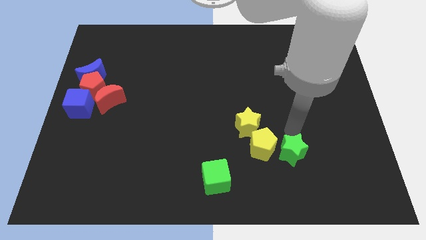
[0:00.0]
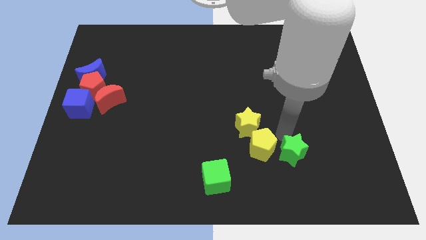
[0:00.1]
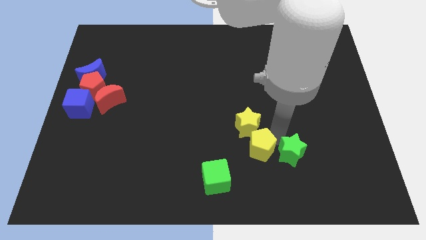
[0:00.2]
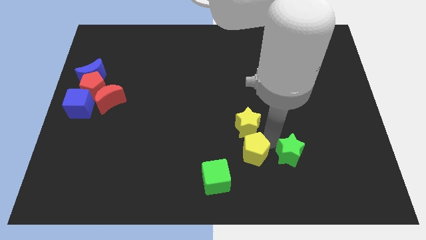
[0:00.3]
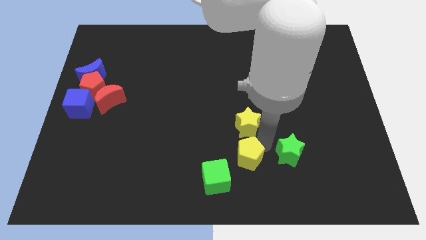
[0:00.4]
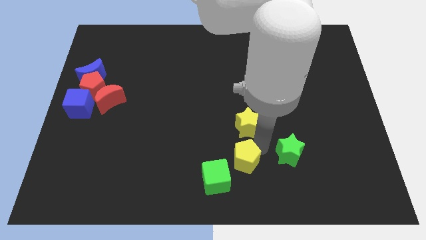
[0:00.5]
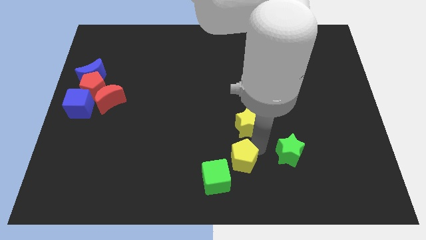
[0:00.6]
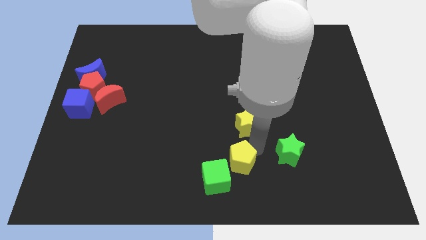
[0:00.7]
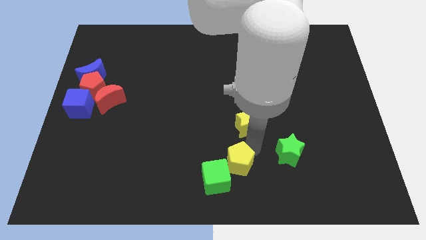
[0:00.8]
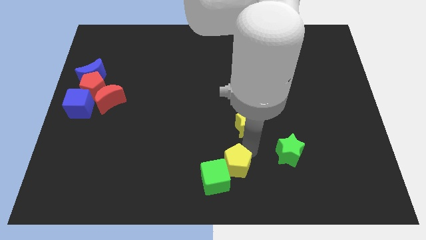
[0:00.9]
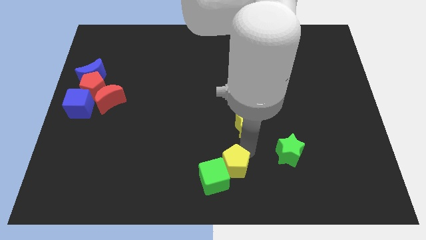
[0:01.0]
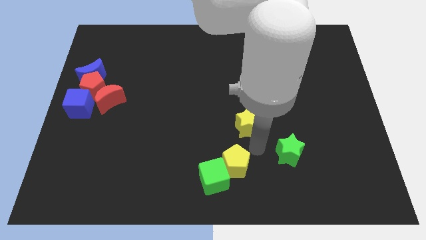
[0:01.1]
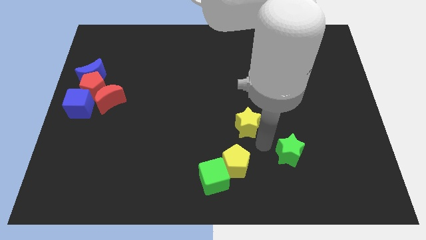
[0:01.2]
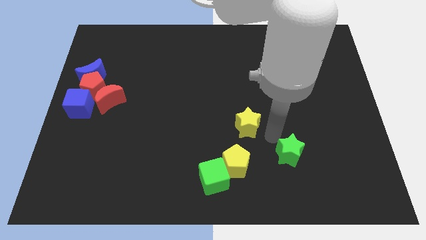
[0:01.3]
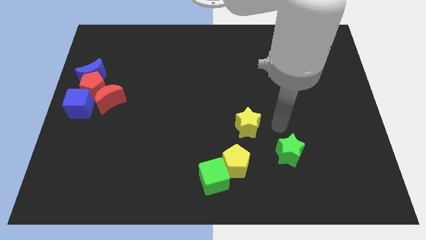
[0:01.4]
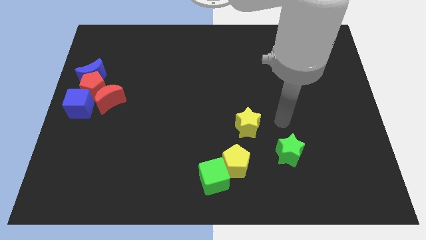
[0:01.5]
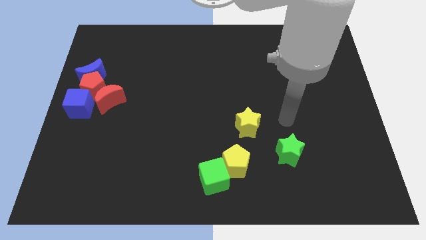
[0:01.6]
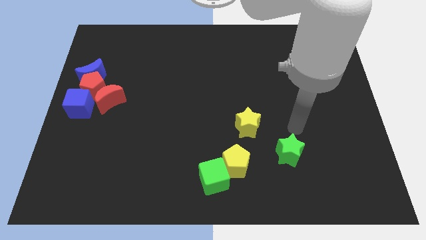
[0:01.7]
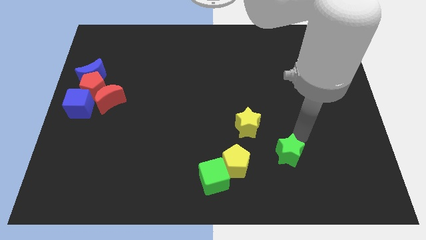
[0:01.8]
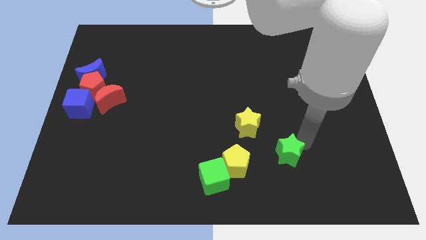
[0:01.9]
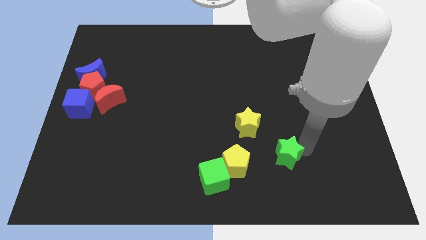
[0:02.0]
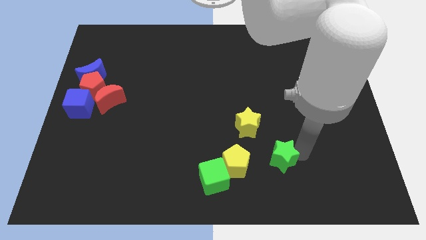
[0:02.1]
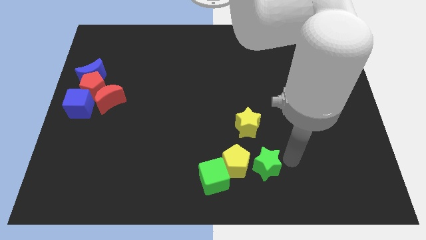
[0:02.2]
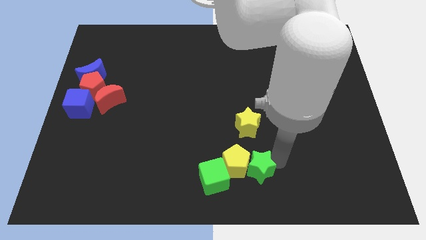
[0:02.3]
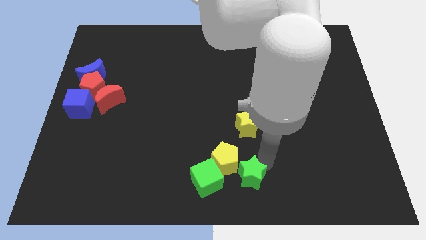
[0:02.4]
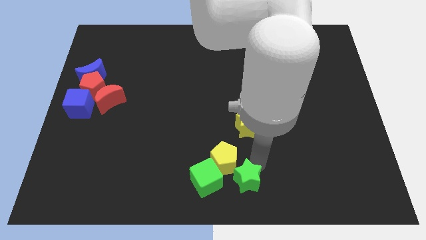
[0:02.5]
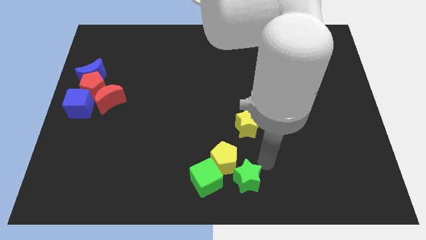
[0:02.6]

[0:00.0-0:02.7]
push yellow pentagon into green cube

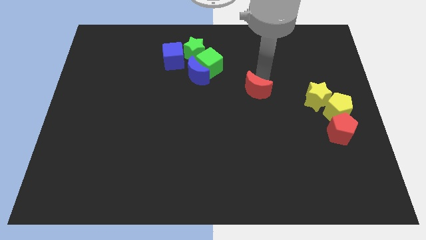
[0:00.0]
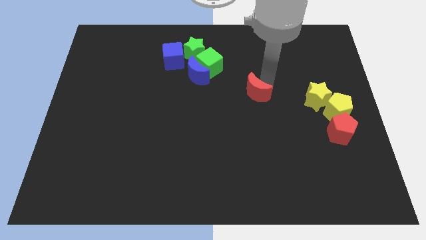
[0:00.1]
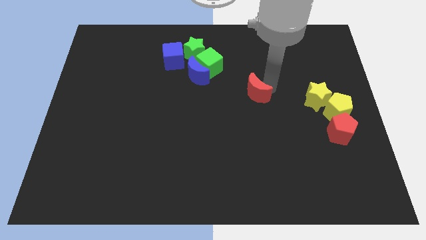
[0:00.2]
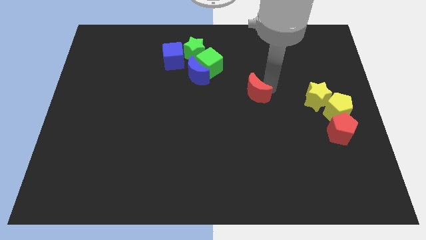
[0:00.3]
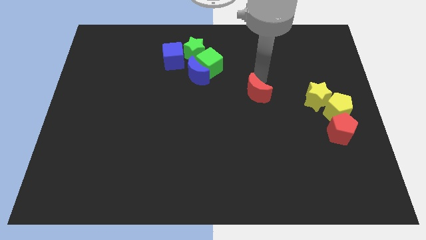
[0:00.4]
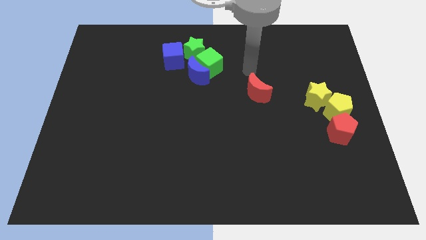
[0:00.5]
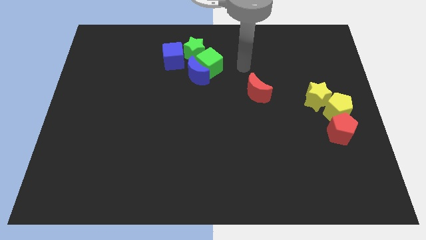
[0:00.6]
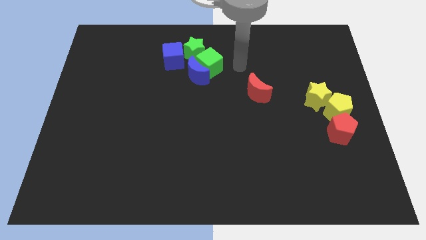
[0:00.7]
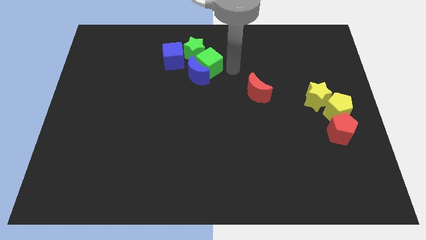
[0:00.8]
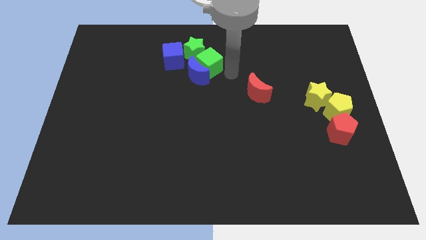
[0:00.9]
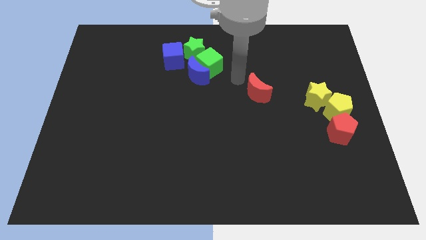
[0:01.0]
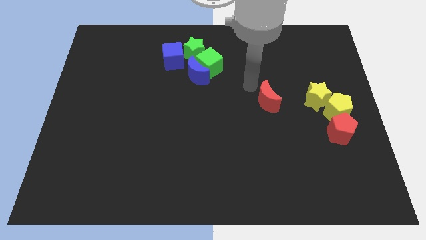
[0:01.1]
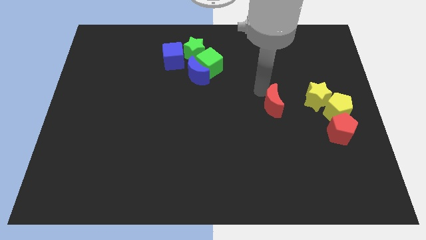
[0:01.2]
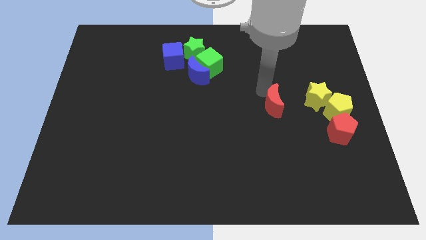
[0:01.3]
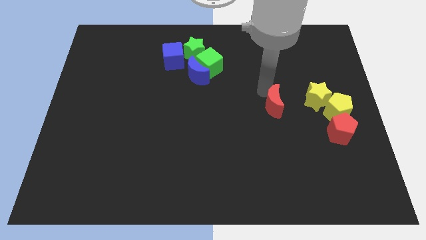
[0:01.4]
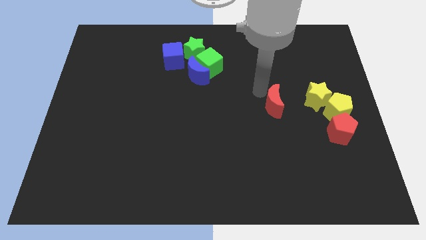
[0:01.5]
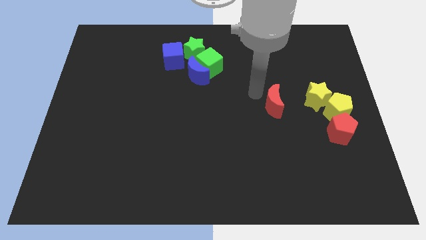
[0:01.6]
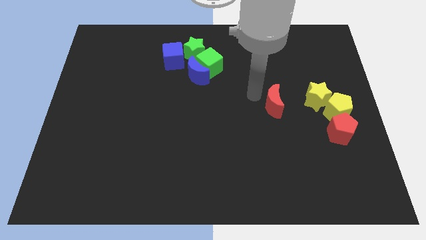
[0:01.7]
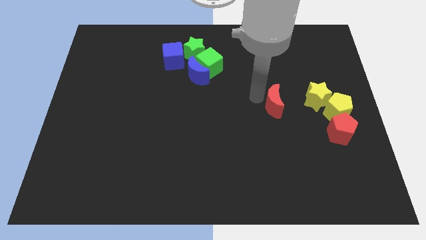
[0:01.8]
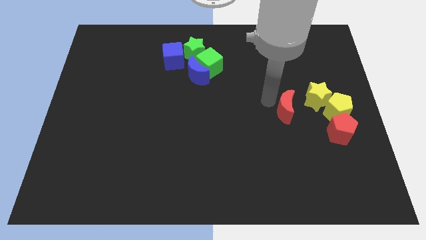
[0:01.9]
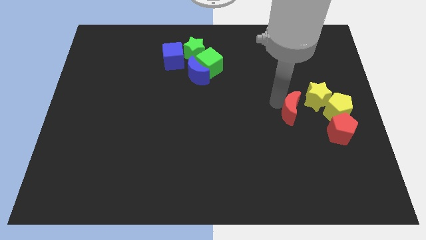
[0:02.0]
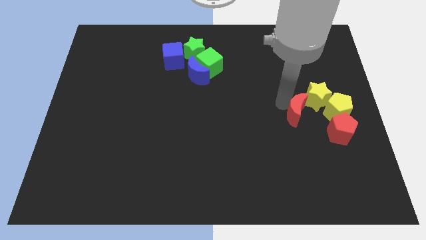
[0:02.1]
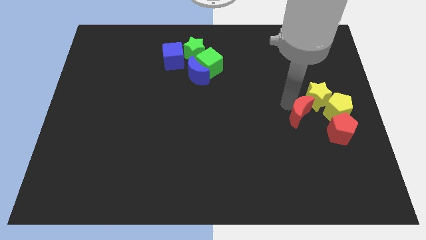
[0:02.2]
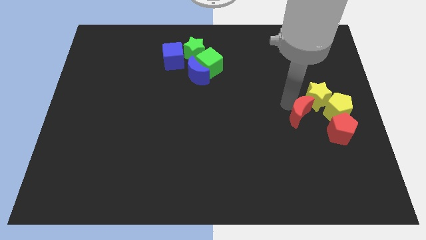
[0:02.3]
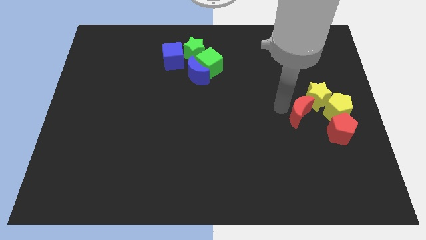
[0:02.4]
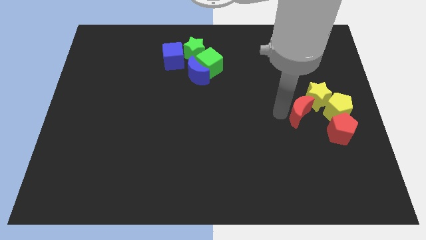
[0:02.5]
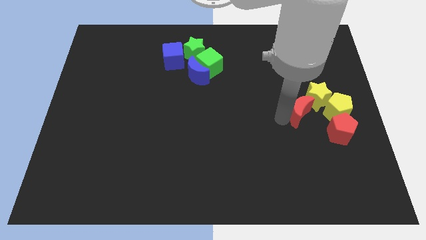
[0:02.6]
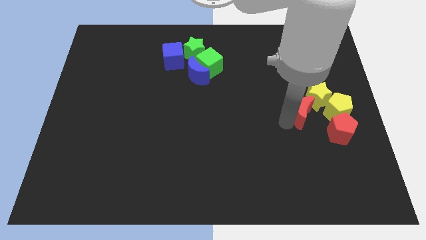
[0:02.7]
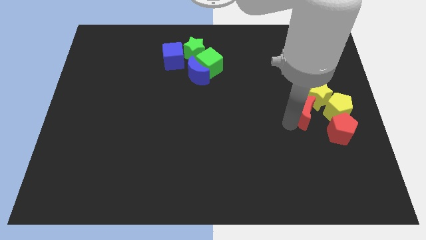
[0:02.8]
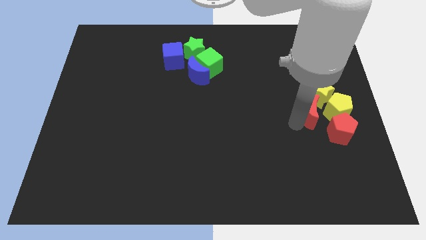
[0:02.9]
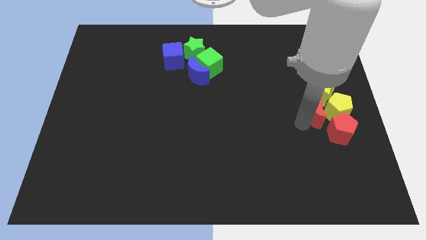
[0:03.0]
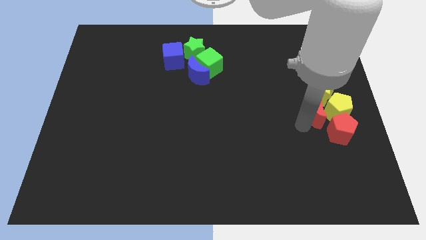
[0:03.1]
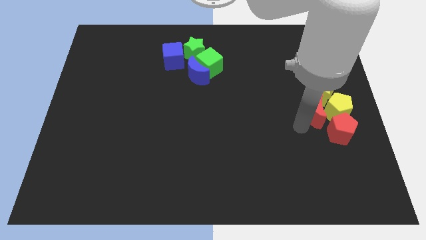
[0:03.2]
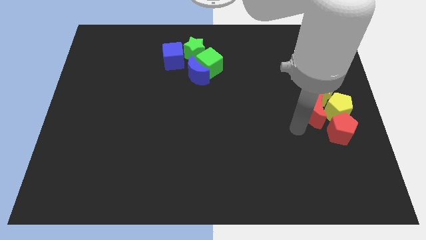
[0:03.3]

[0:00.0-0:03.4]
make the red crescent to touch the bottom side of the yellow star

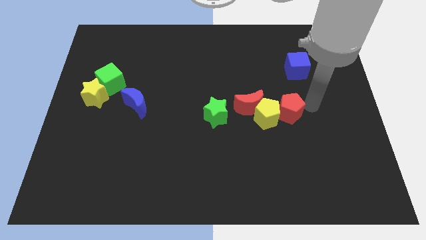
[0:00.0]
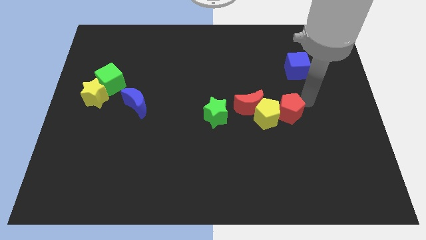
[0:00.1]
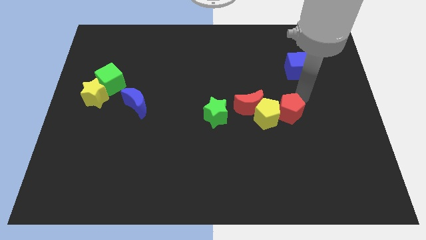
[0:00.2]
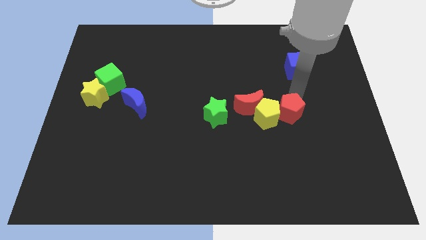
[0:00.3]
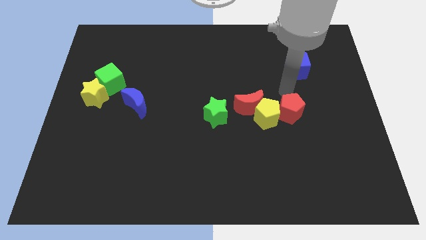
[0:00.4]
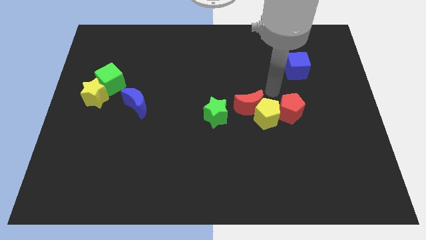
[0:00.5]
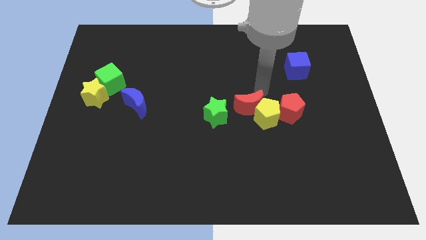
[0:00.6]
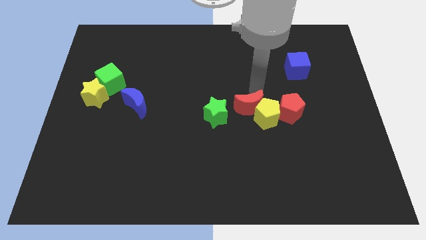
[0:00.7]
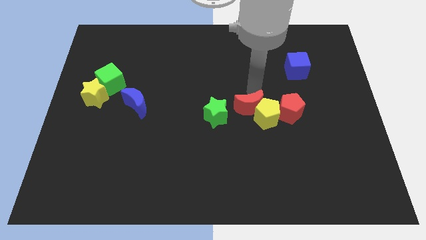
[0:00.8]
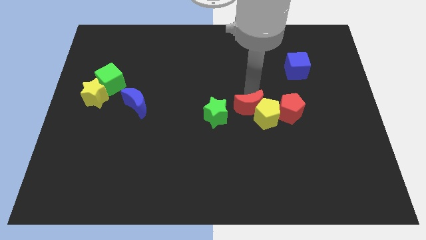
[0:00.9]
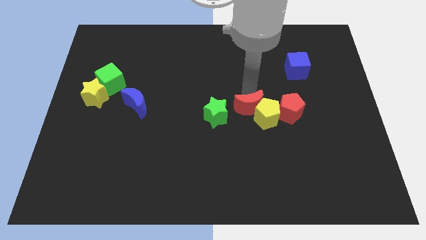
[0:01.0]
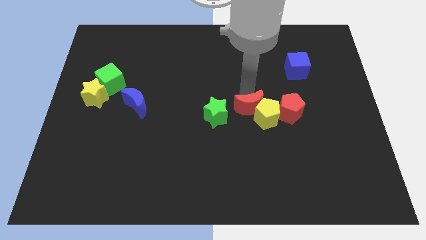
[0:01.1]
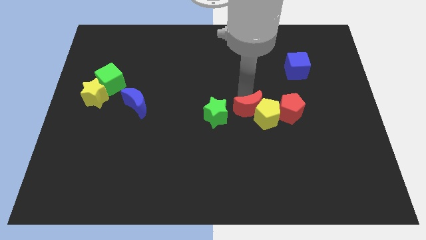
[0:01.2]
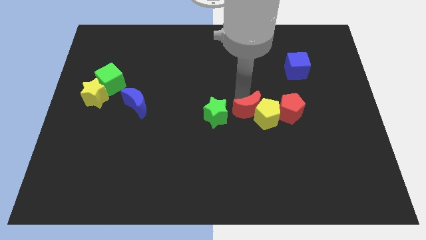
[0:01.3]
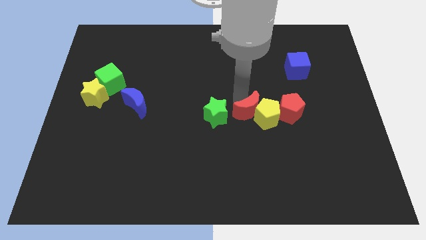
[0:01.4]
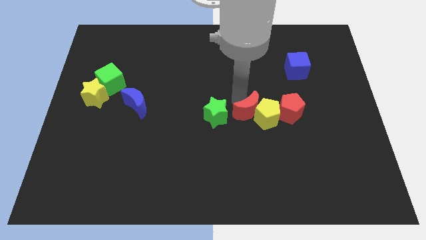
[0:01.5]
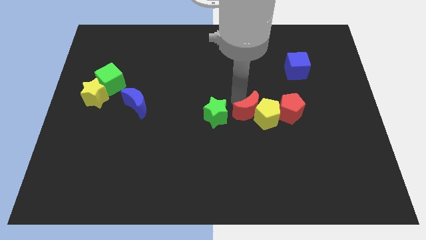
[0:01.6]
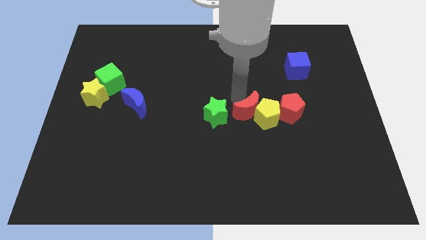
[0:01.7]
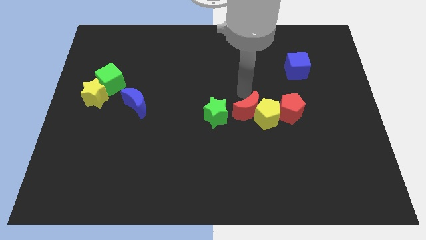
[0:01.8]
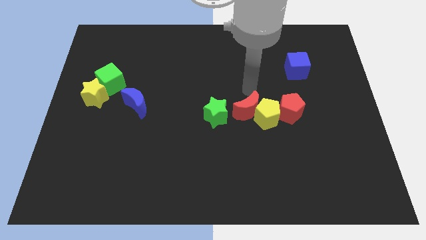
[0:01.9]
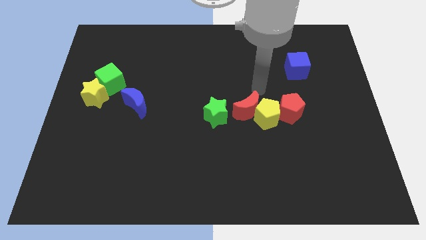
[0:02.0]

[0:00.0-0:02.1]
move the red crescent towards right of green star

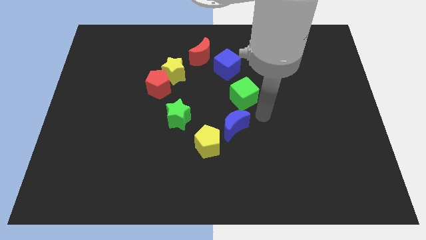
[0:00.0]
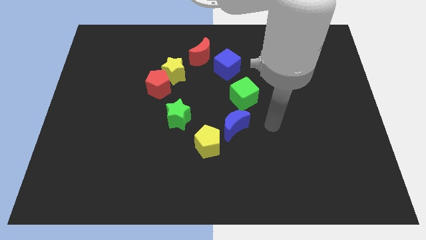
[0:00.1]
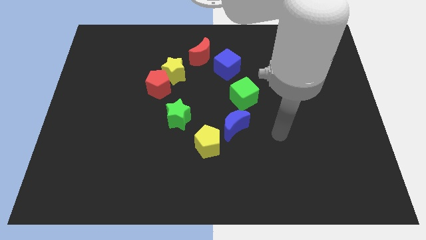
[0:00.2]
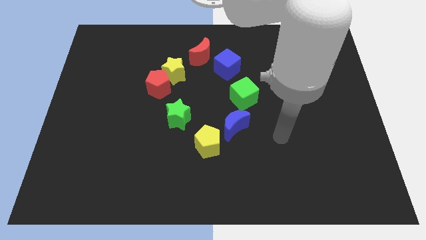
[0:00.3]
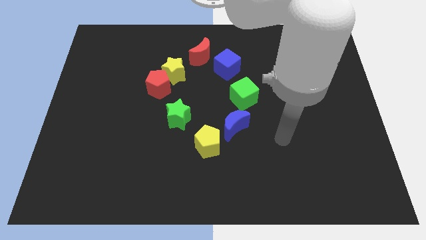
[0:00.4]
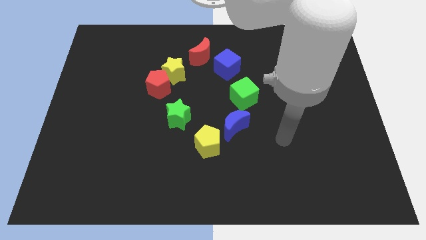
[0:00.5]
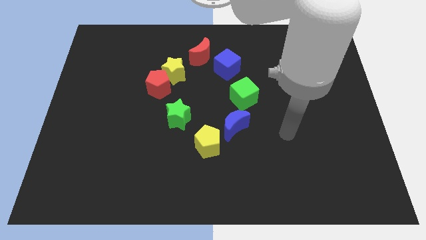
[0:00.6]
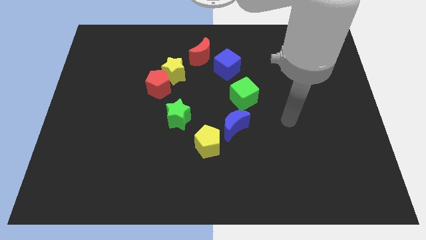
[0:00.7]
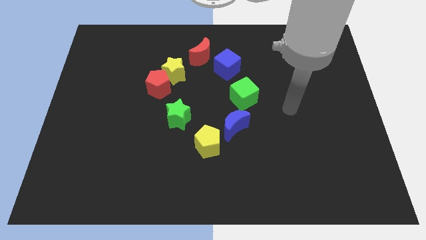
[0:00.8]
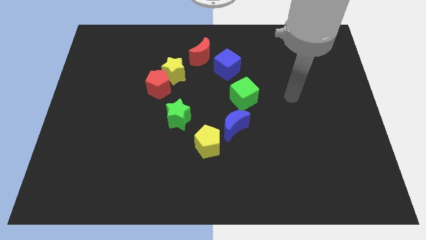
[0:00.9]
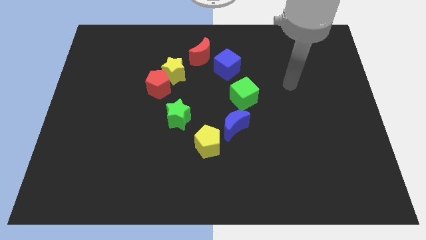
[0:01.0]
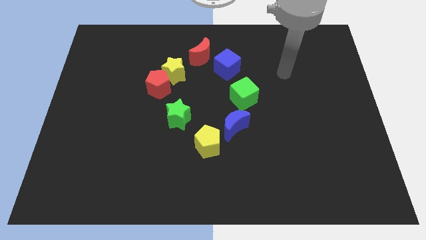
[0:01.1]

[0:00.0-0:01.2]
move the arm away from the green cube
